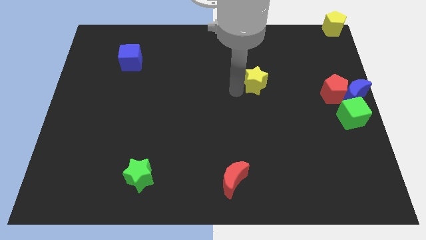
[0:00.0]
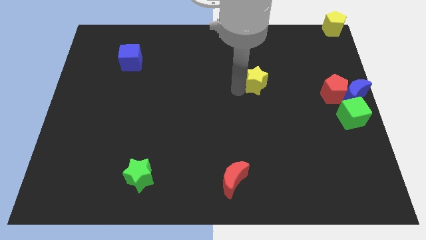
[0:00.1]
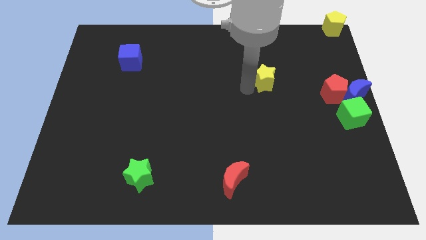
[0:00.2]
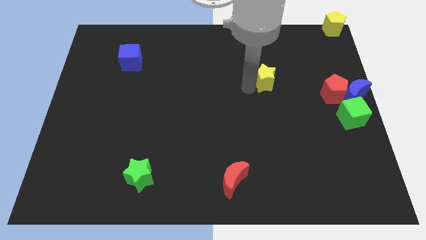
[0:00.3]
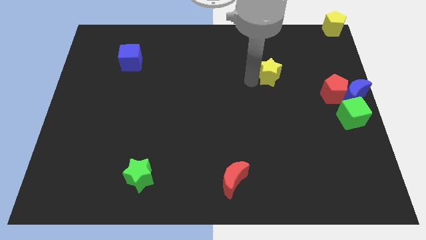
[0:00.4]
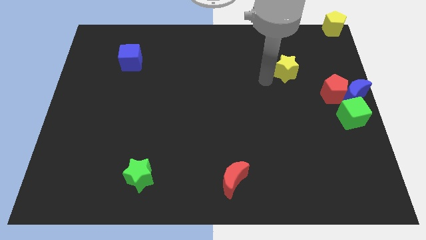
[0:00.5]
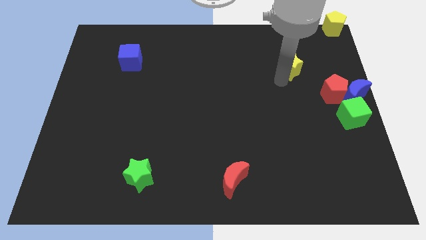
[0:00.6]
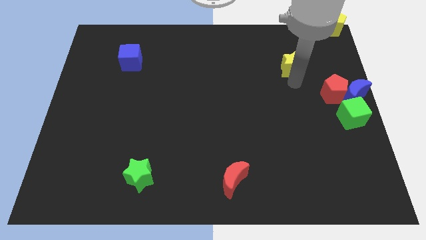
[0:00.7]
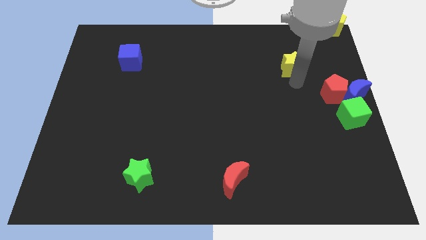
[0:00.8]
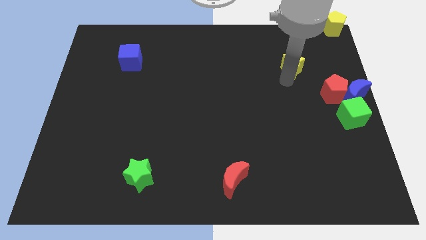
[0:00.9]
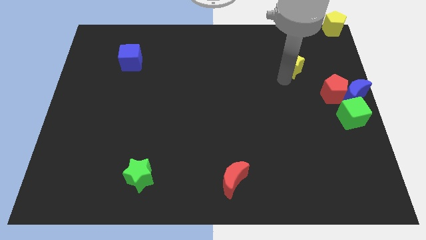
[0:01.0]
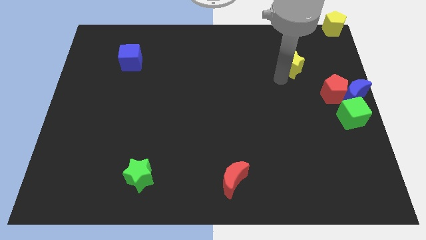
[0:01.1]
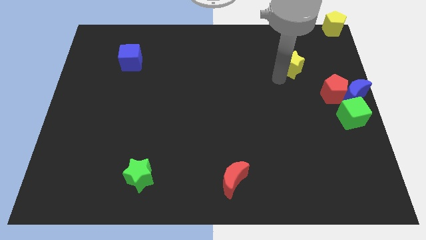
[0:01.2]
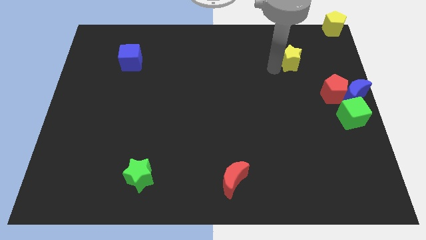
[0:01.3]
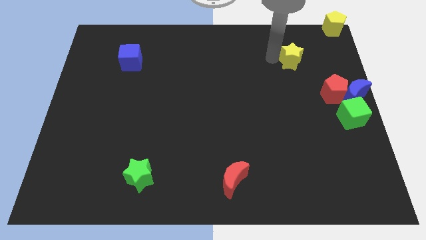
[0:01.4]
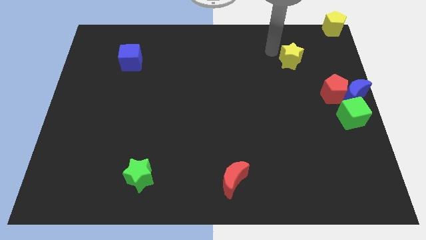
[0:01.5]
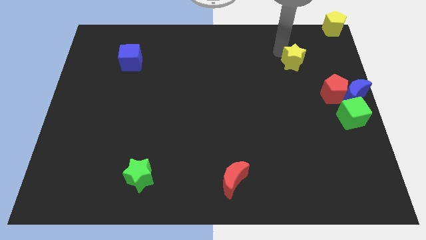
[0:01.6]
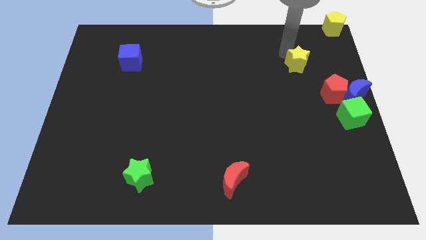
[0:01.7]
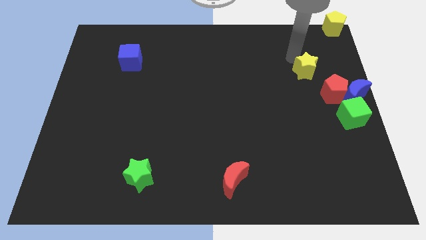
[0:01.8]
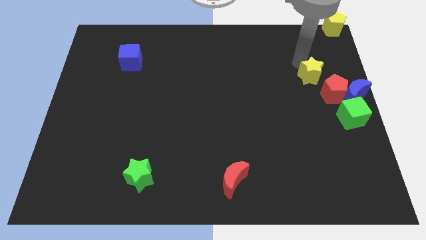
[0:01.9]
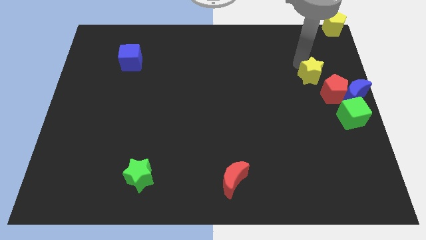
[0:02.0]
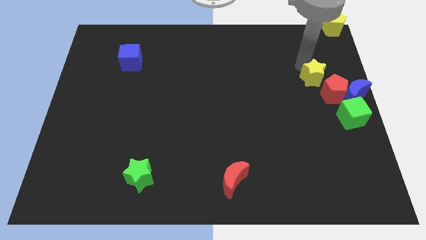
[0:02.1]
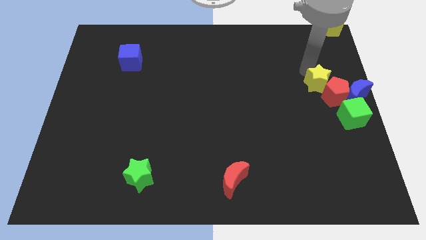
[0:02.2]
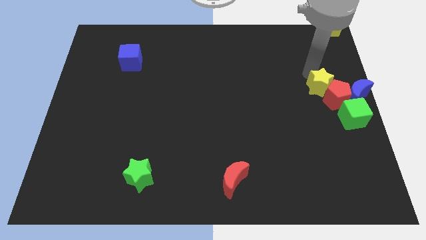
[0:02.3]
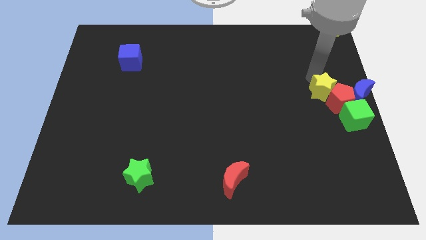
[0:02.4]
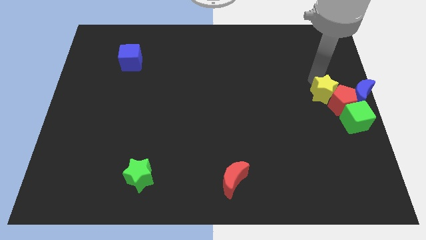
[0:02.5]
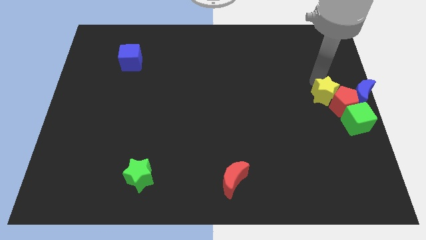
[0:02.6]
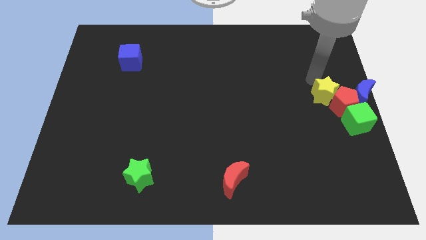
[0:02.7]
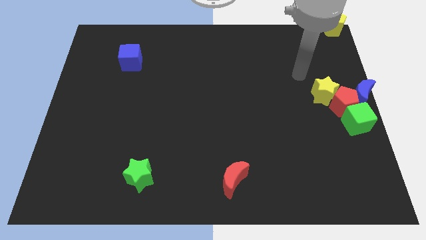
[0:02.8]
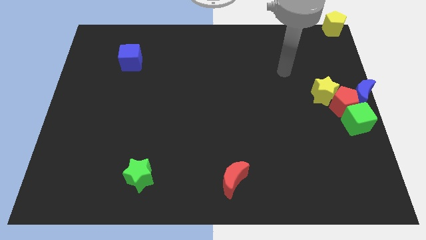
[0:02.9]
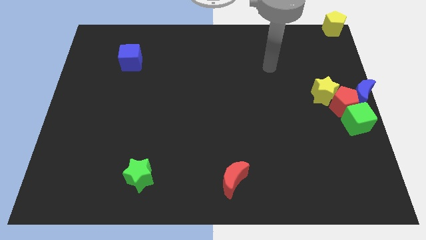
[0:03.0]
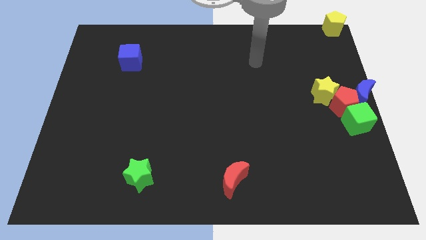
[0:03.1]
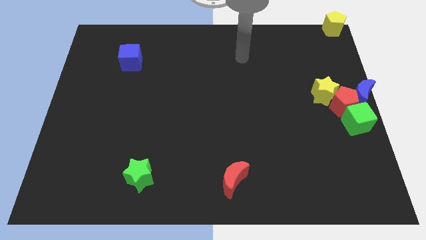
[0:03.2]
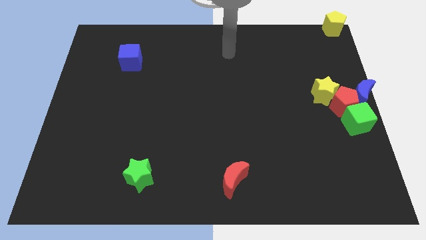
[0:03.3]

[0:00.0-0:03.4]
push the yellow star into the red pentagon

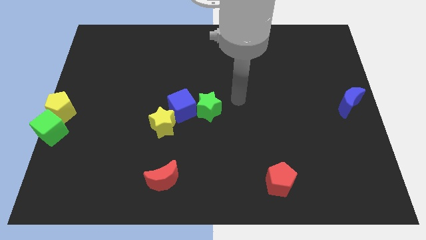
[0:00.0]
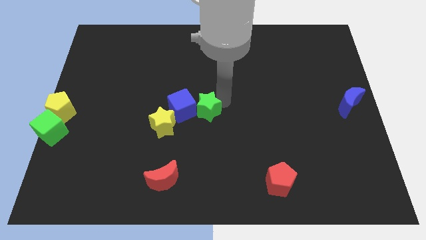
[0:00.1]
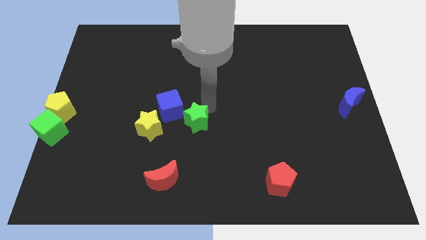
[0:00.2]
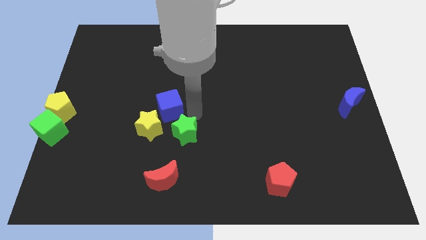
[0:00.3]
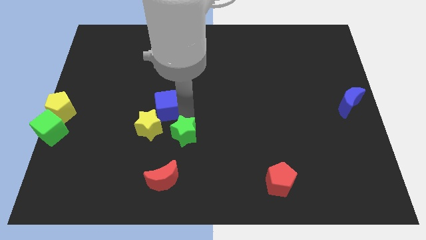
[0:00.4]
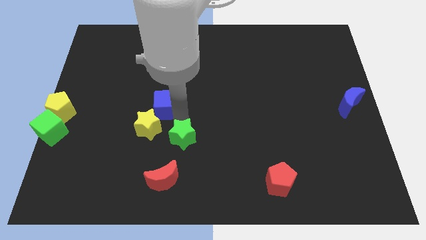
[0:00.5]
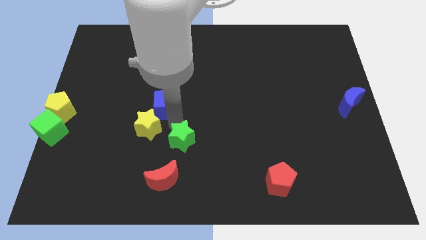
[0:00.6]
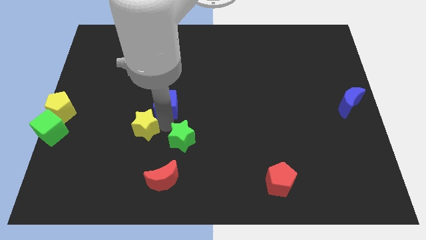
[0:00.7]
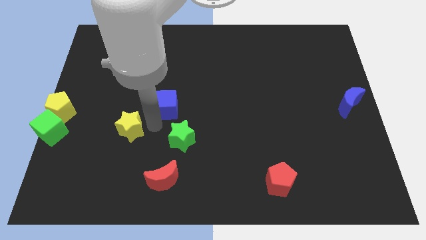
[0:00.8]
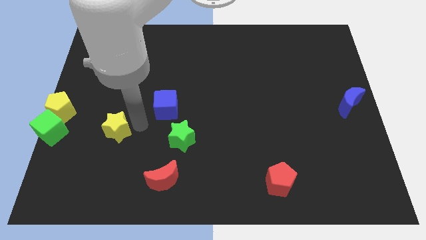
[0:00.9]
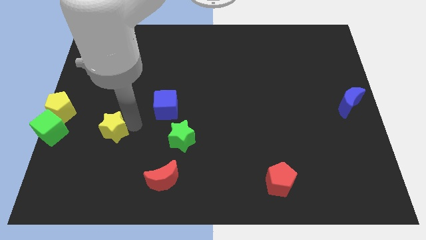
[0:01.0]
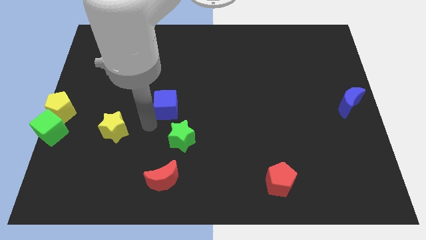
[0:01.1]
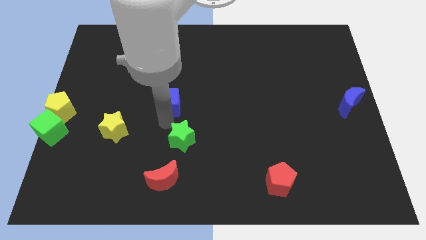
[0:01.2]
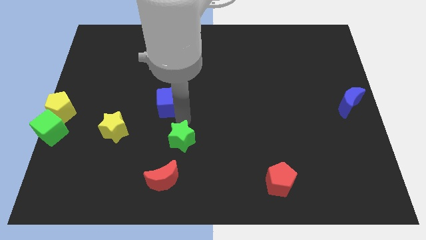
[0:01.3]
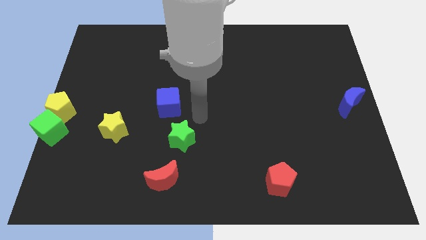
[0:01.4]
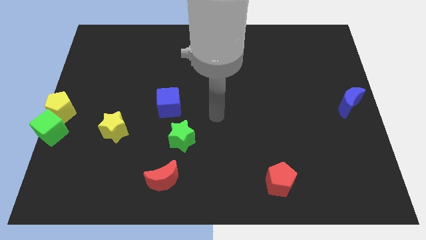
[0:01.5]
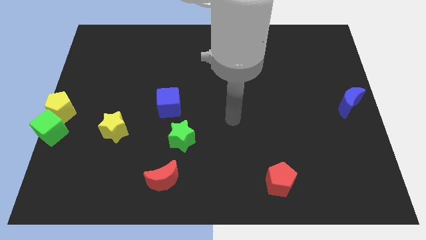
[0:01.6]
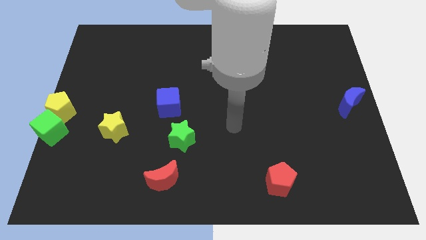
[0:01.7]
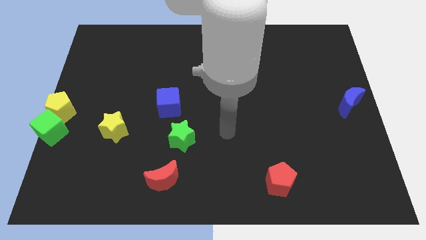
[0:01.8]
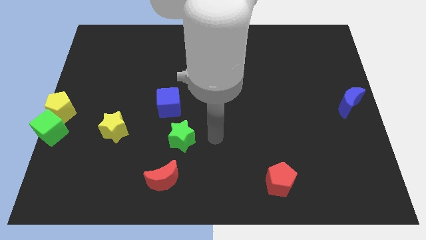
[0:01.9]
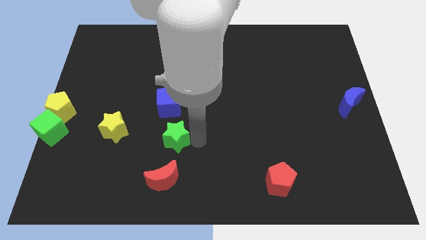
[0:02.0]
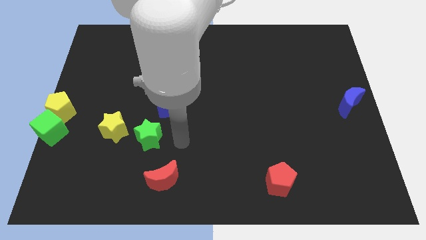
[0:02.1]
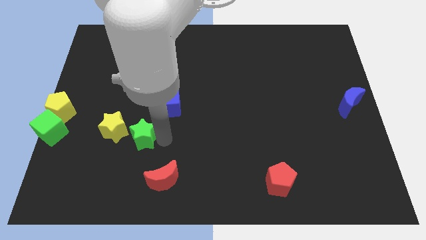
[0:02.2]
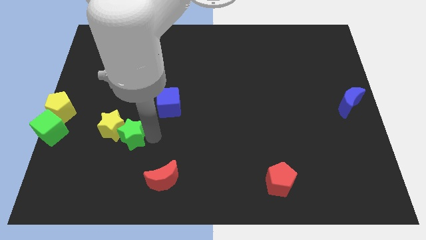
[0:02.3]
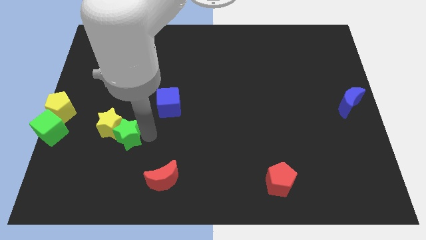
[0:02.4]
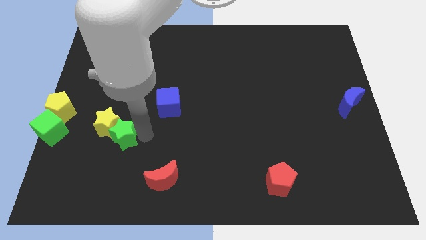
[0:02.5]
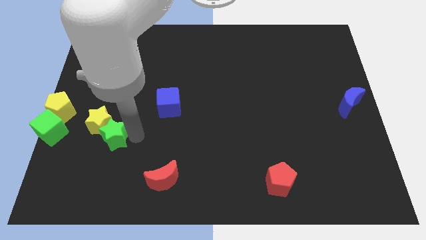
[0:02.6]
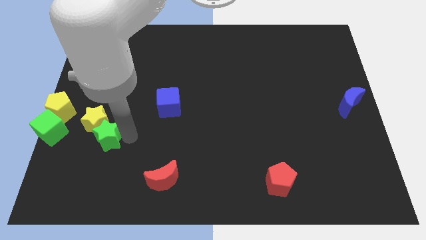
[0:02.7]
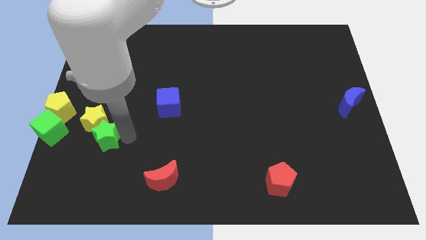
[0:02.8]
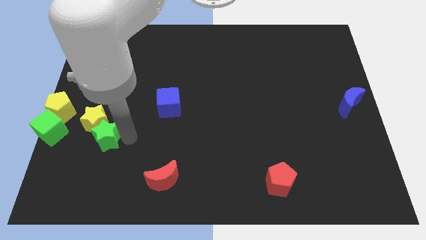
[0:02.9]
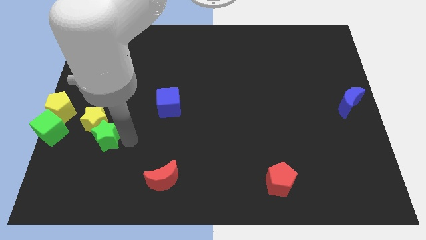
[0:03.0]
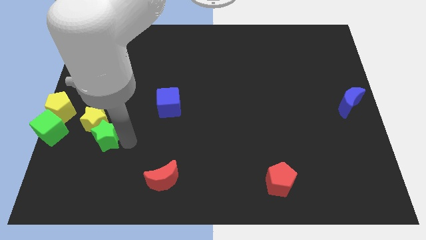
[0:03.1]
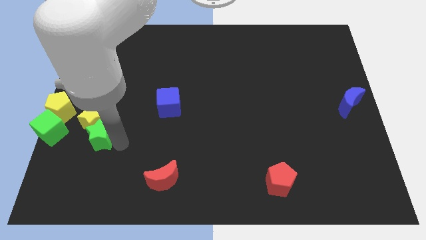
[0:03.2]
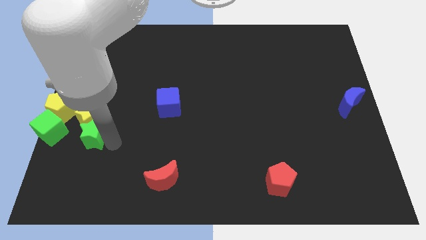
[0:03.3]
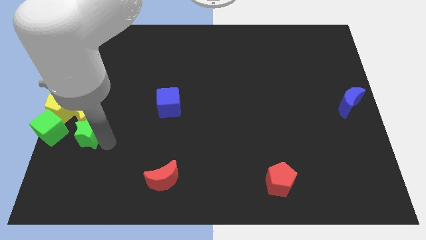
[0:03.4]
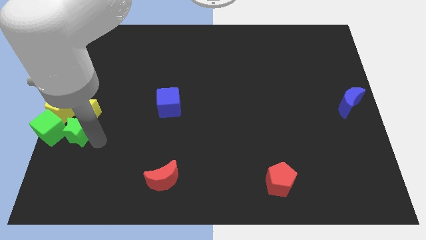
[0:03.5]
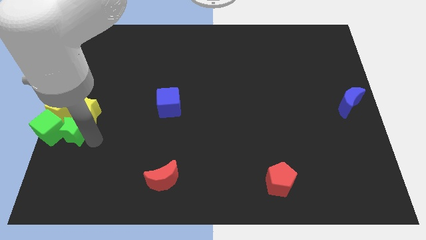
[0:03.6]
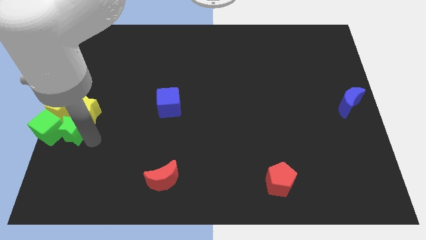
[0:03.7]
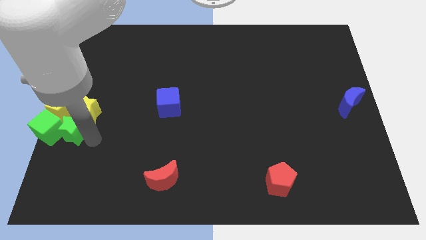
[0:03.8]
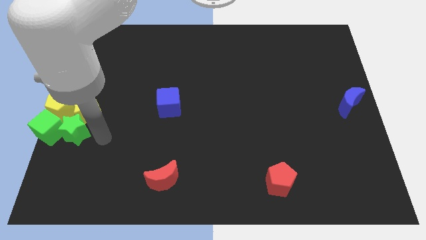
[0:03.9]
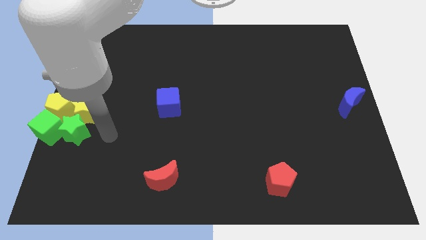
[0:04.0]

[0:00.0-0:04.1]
push the green star along with the yellow star to the left center of the board

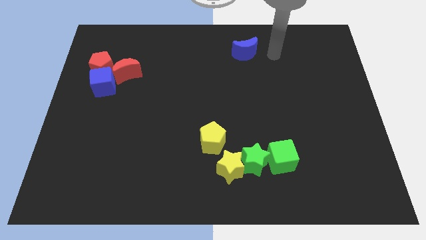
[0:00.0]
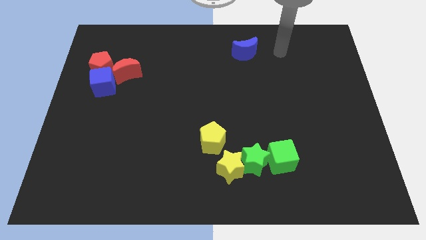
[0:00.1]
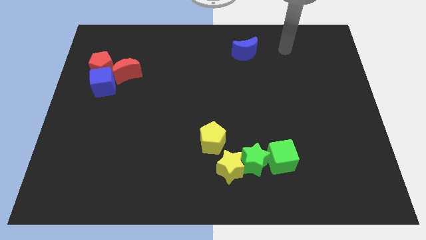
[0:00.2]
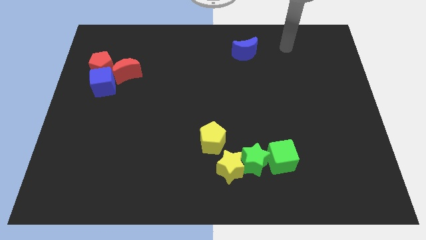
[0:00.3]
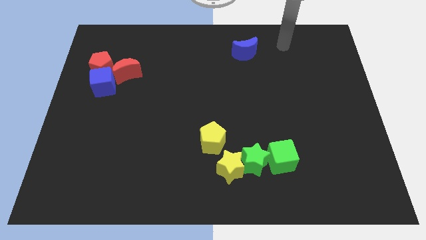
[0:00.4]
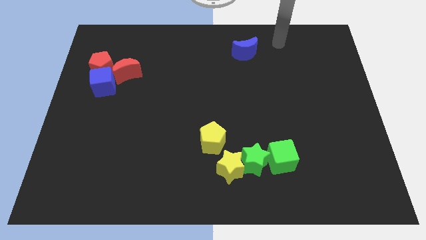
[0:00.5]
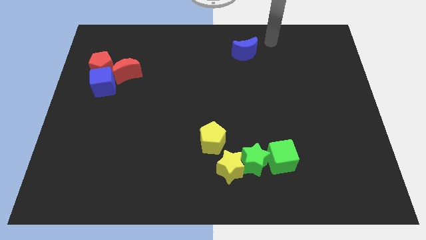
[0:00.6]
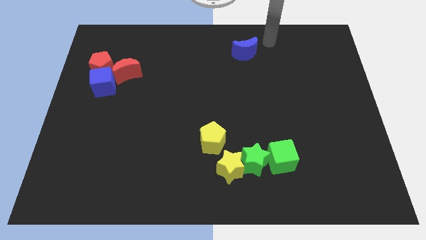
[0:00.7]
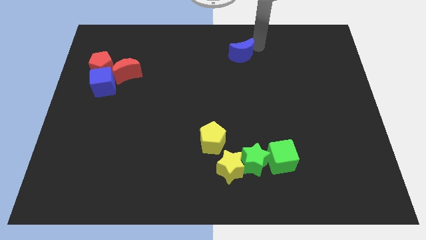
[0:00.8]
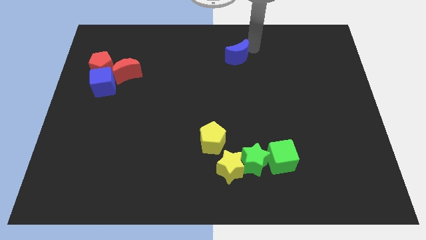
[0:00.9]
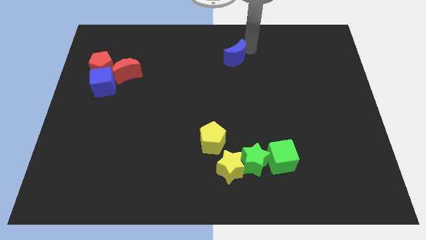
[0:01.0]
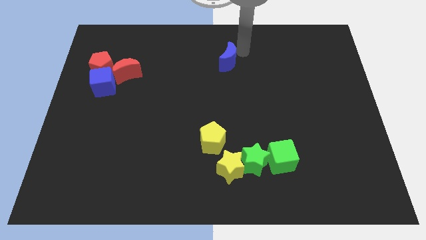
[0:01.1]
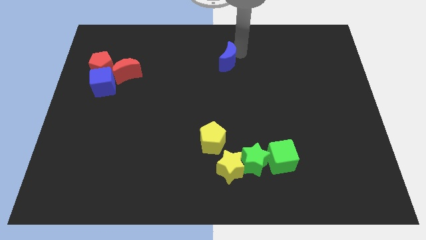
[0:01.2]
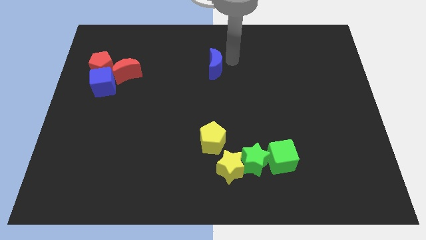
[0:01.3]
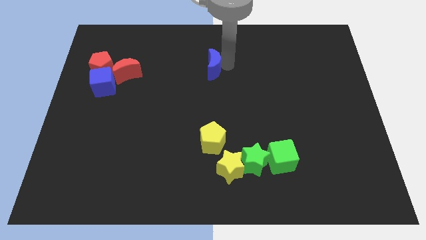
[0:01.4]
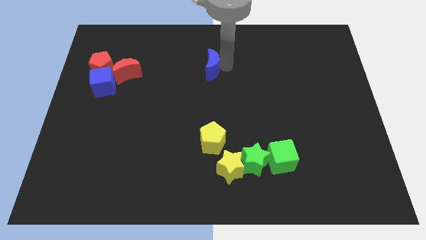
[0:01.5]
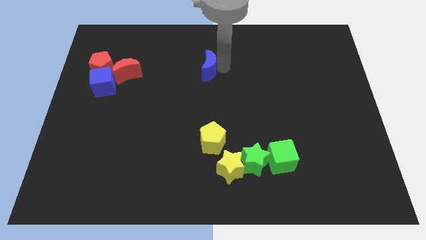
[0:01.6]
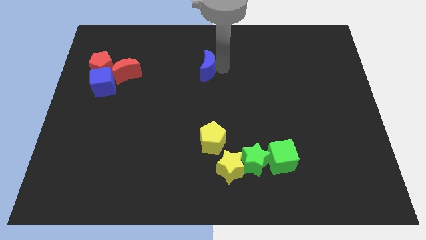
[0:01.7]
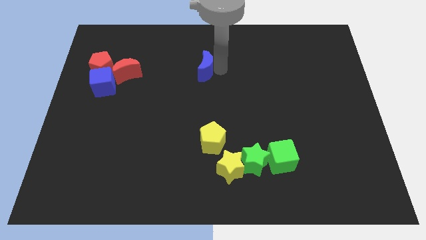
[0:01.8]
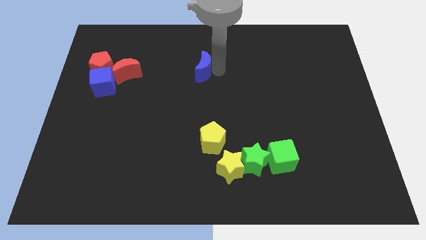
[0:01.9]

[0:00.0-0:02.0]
push blue crescent above yellow pentagon
